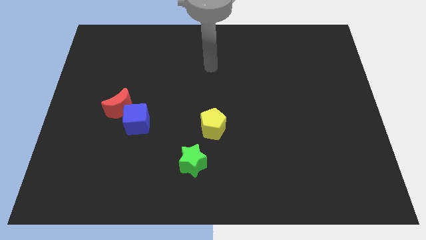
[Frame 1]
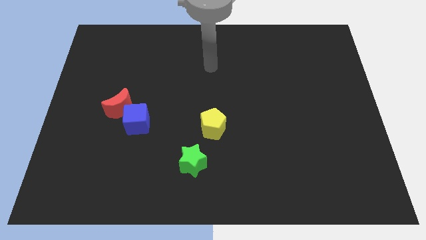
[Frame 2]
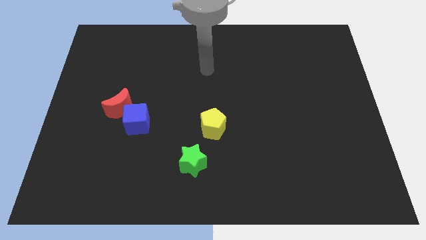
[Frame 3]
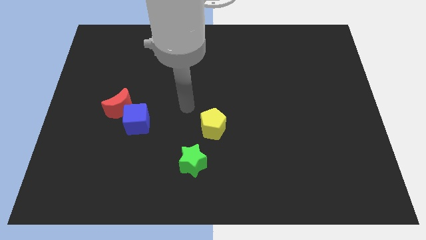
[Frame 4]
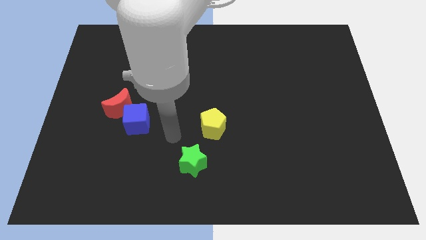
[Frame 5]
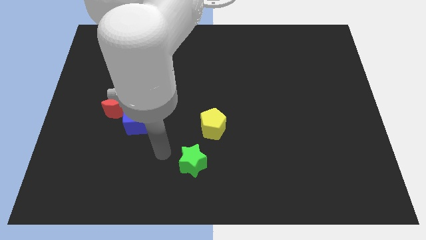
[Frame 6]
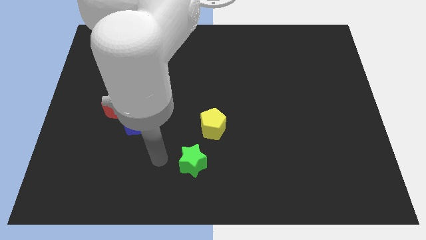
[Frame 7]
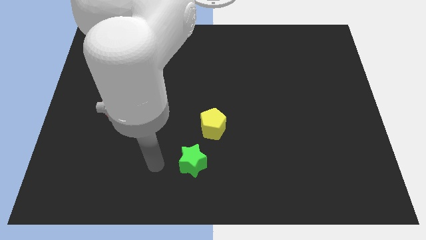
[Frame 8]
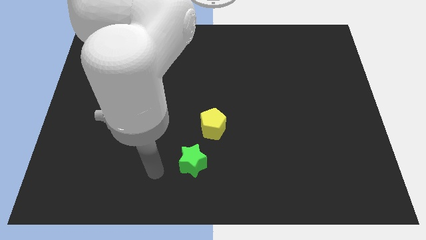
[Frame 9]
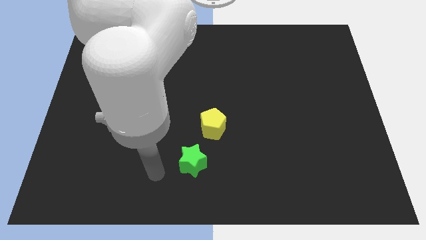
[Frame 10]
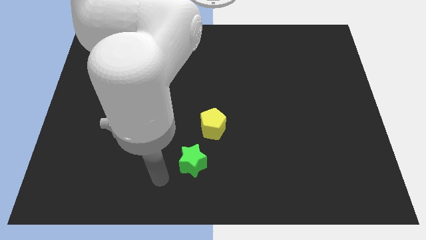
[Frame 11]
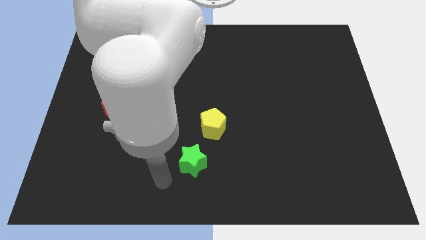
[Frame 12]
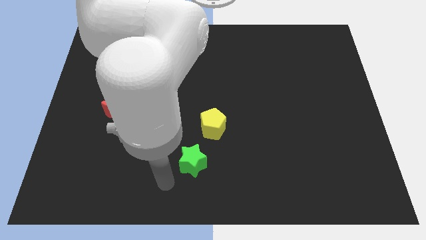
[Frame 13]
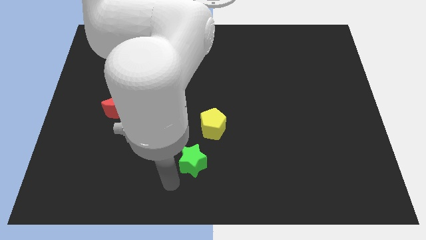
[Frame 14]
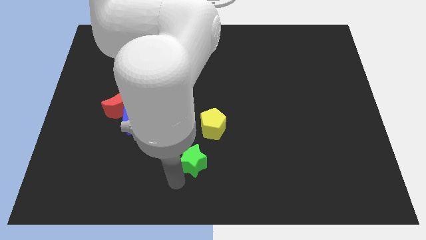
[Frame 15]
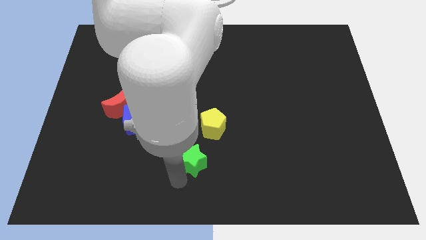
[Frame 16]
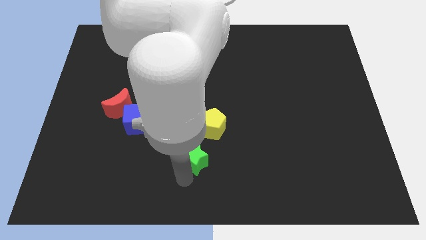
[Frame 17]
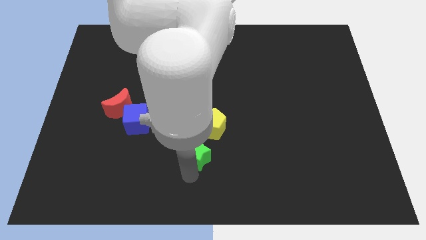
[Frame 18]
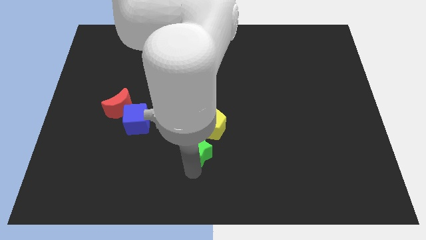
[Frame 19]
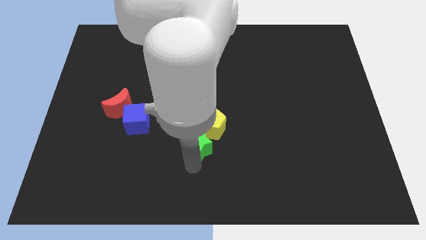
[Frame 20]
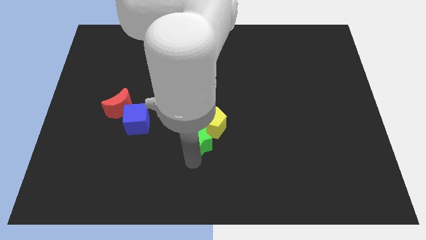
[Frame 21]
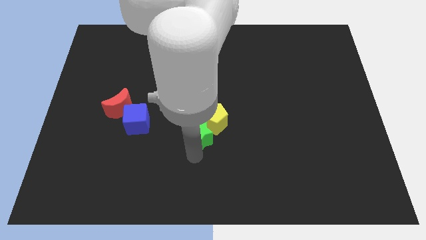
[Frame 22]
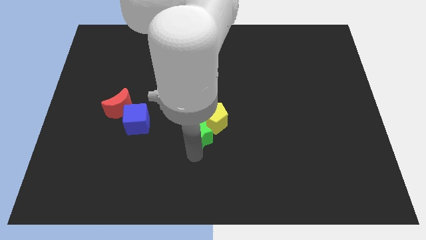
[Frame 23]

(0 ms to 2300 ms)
slide the green star close to the yellow block

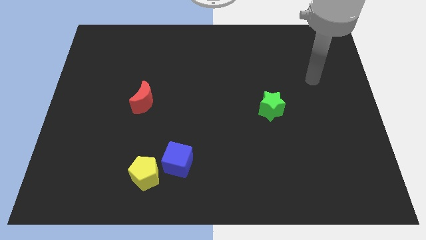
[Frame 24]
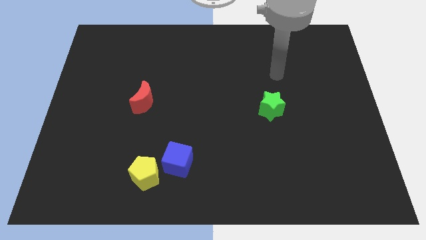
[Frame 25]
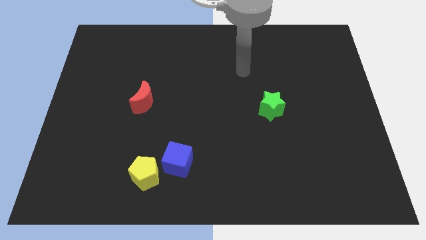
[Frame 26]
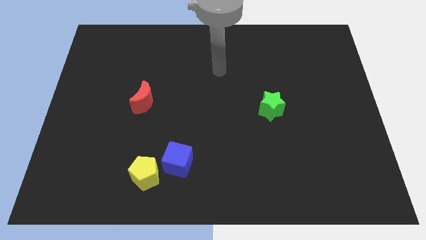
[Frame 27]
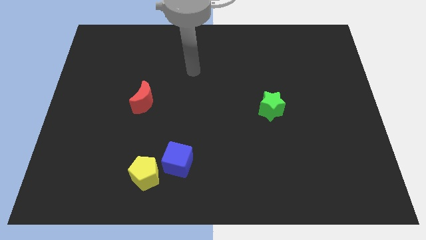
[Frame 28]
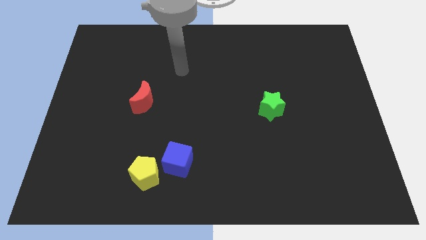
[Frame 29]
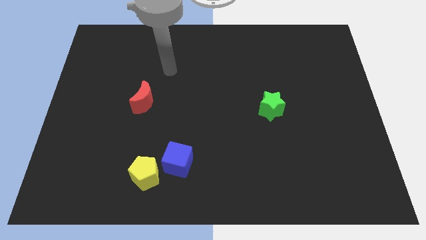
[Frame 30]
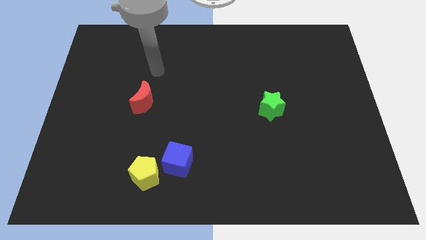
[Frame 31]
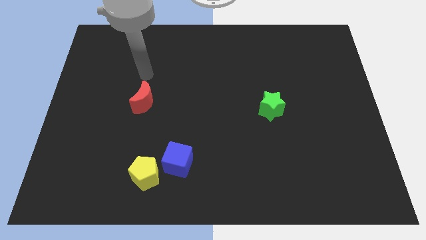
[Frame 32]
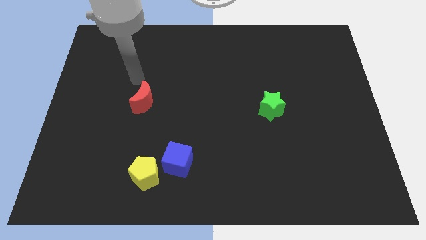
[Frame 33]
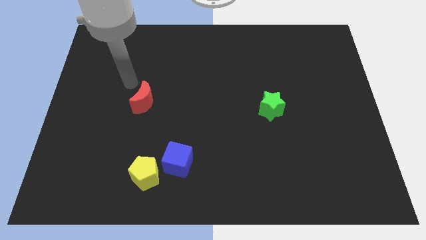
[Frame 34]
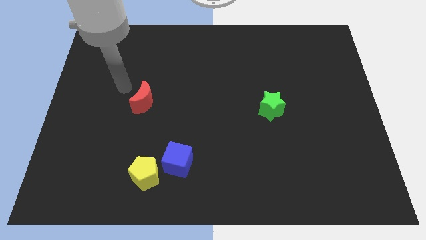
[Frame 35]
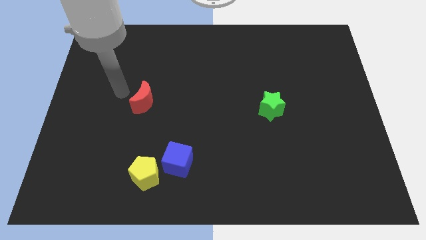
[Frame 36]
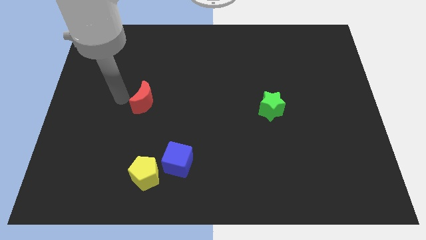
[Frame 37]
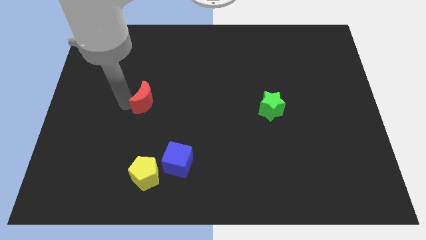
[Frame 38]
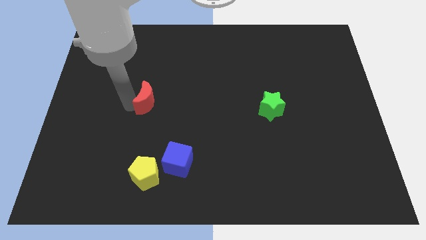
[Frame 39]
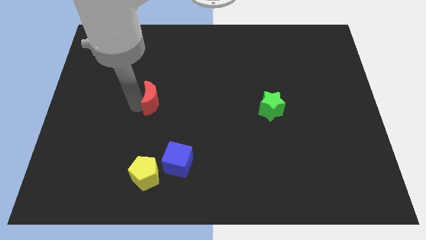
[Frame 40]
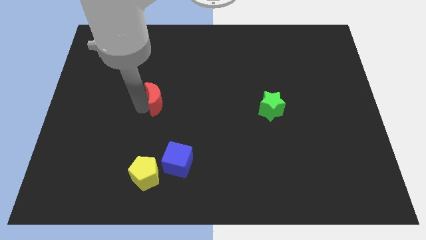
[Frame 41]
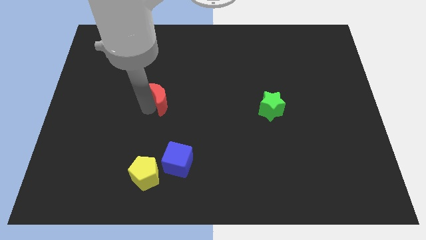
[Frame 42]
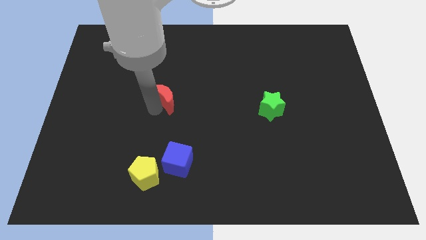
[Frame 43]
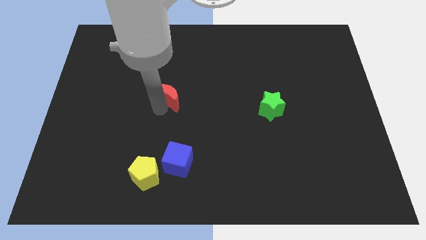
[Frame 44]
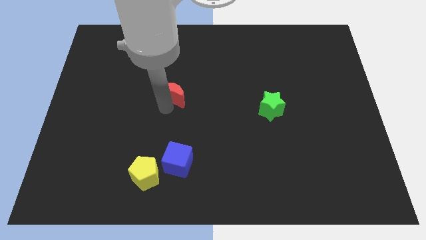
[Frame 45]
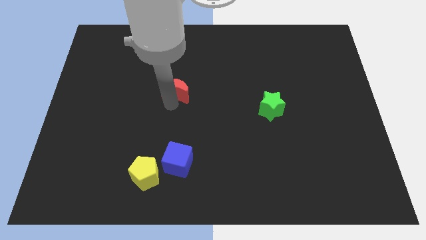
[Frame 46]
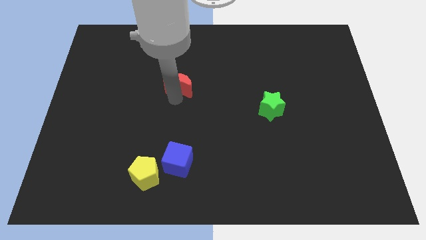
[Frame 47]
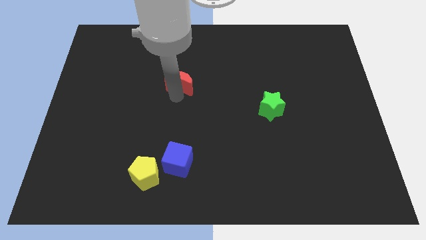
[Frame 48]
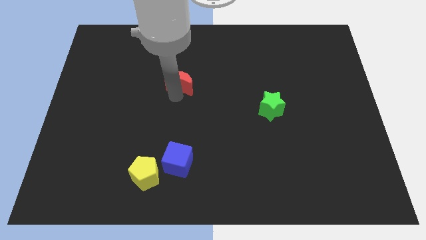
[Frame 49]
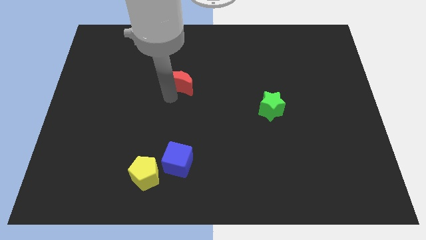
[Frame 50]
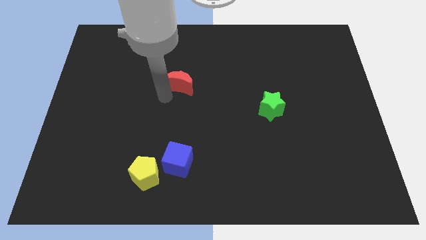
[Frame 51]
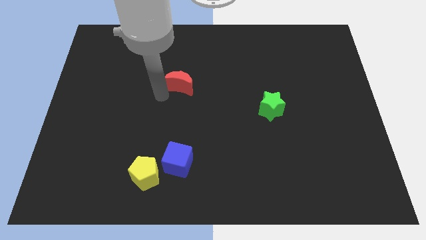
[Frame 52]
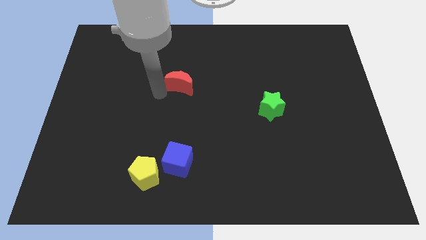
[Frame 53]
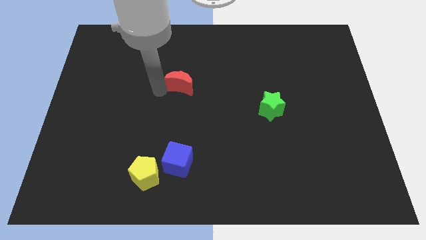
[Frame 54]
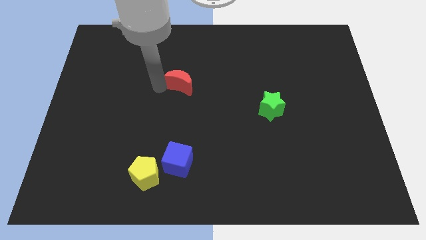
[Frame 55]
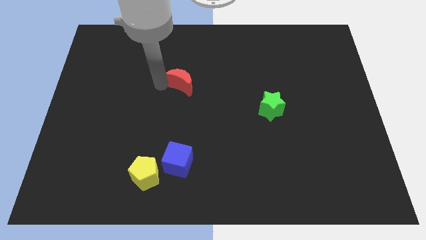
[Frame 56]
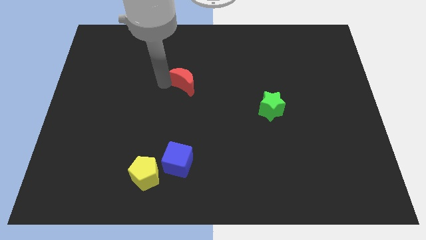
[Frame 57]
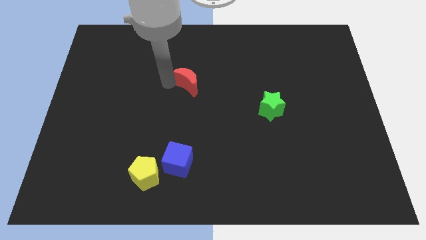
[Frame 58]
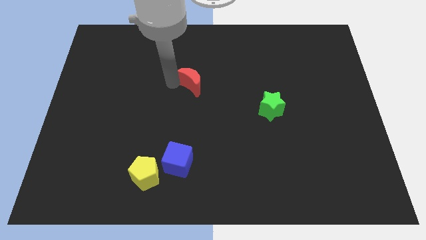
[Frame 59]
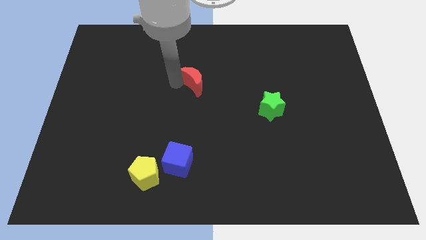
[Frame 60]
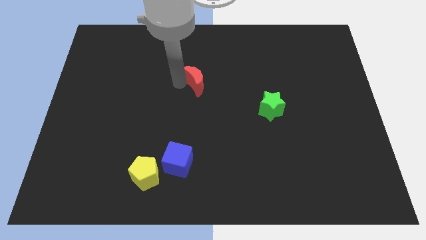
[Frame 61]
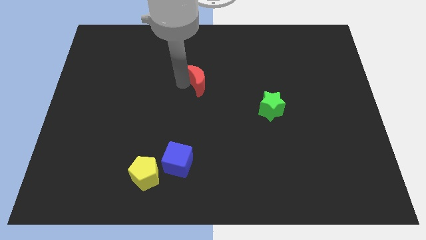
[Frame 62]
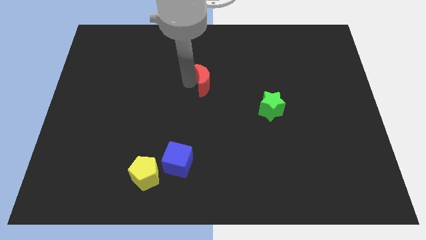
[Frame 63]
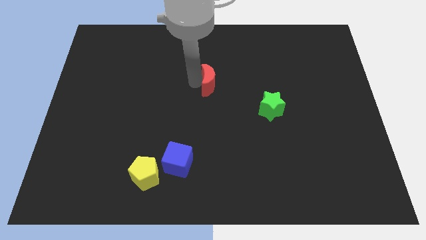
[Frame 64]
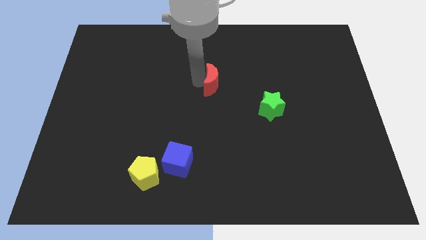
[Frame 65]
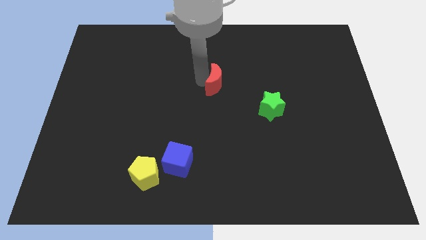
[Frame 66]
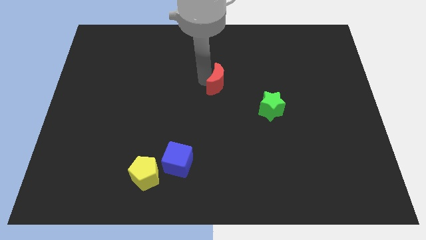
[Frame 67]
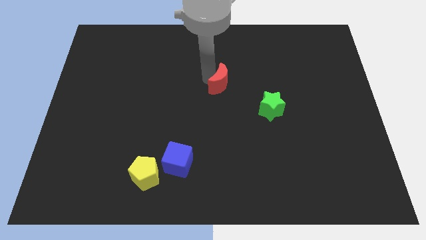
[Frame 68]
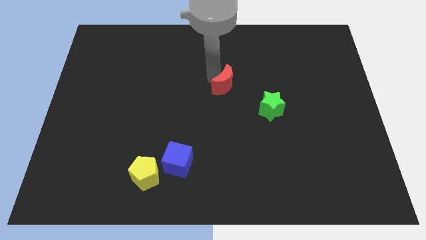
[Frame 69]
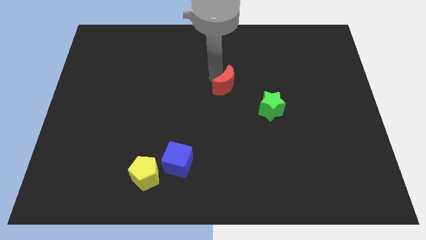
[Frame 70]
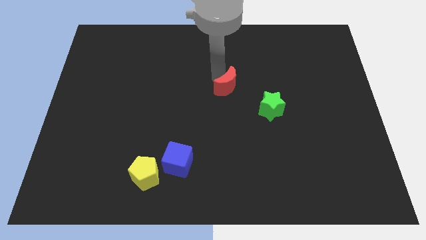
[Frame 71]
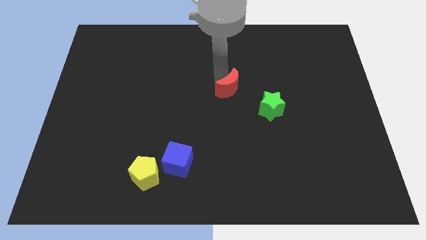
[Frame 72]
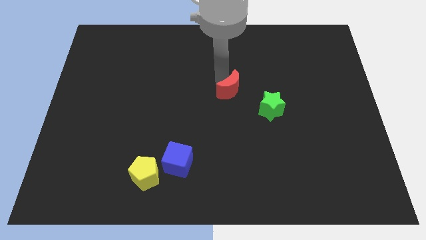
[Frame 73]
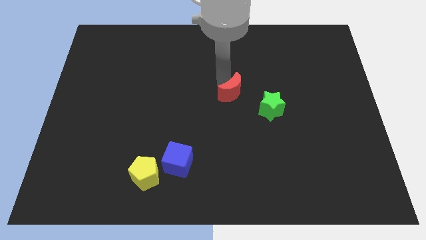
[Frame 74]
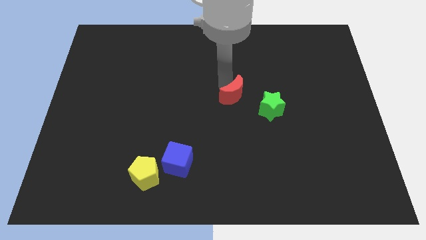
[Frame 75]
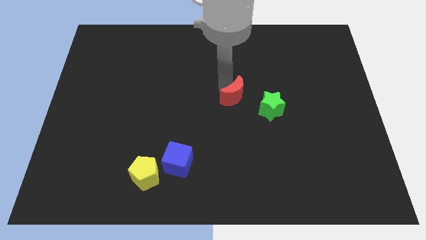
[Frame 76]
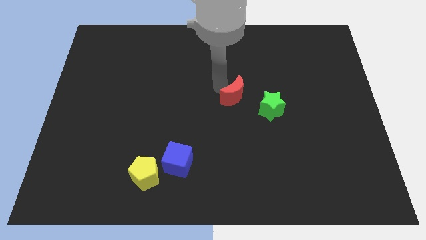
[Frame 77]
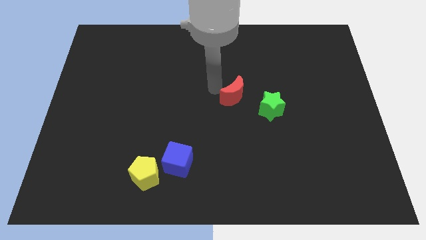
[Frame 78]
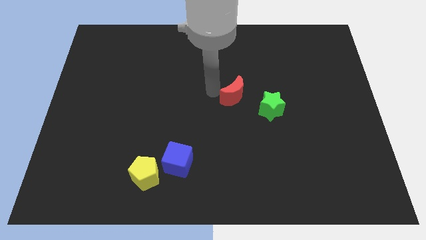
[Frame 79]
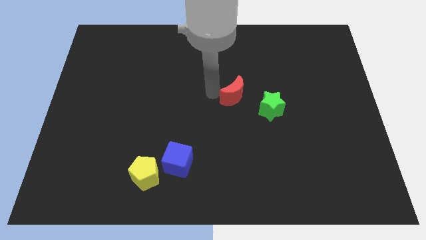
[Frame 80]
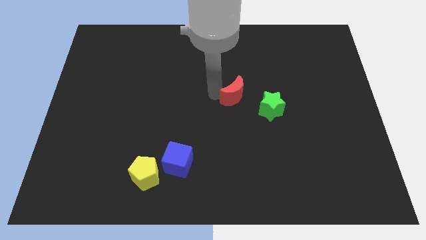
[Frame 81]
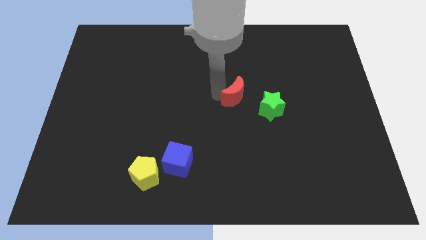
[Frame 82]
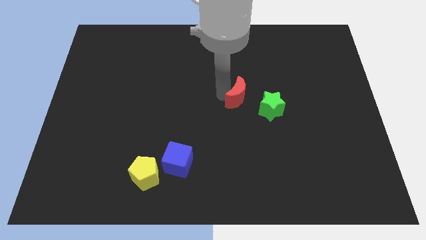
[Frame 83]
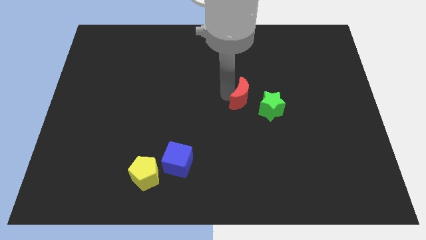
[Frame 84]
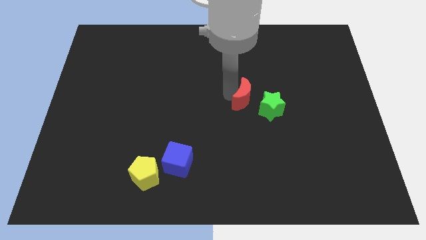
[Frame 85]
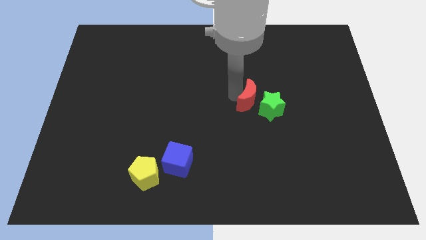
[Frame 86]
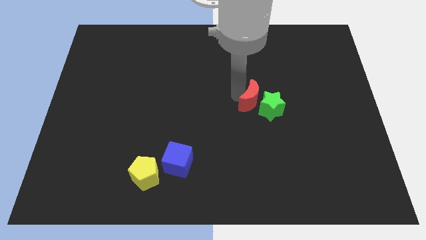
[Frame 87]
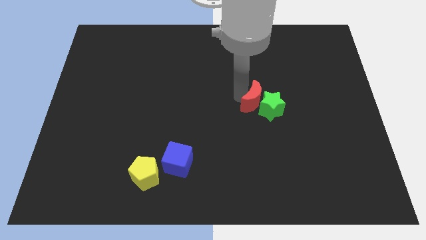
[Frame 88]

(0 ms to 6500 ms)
push the red moon towards the green block
